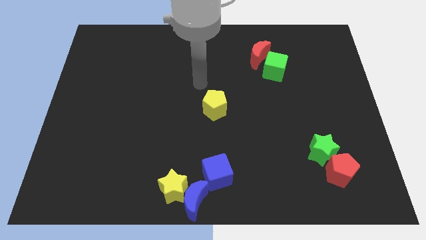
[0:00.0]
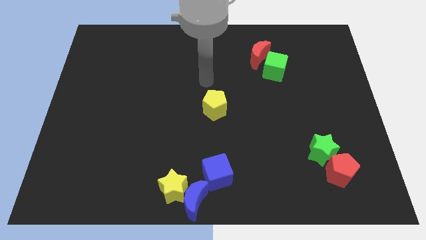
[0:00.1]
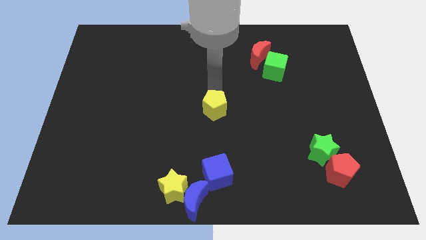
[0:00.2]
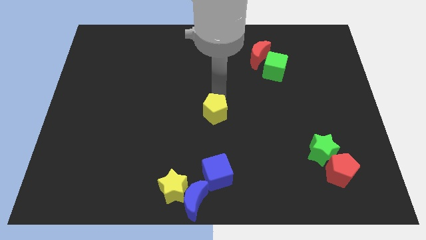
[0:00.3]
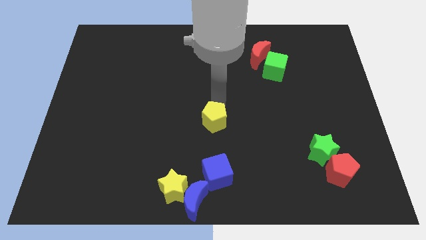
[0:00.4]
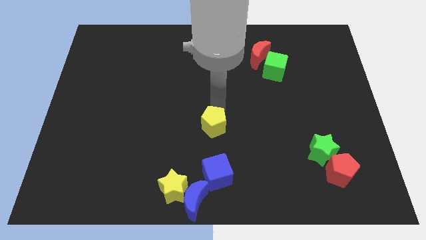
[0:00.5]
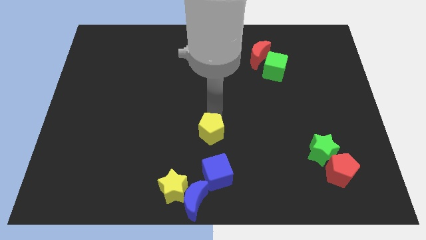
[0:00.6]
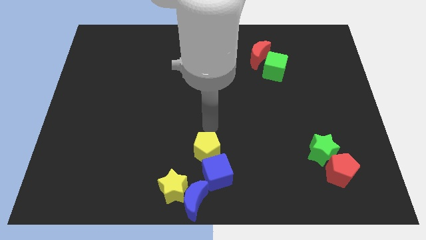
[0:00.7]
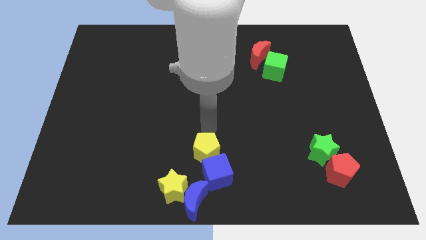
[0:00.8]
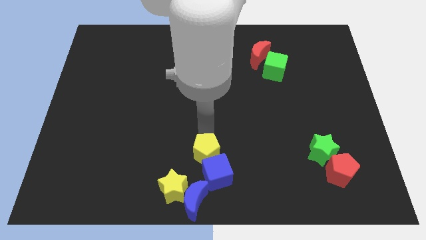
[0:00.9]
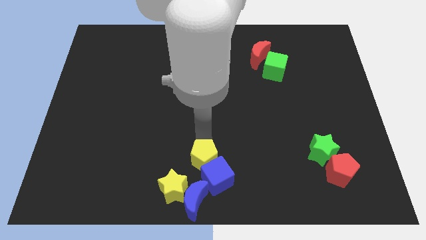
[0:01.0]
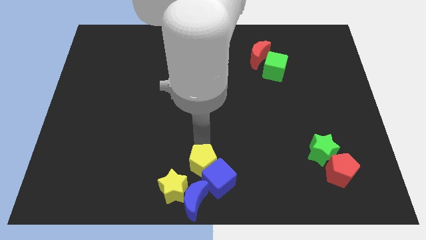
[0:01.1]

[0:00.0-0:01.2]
place yellow pentagon above the blue moon

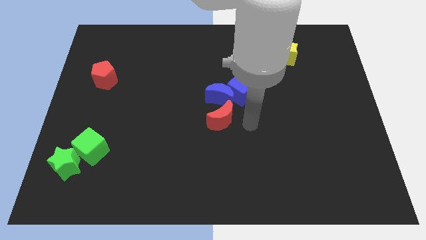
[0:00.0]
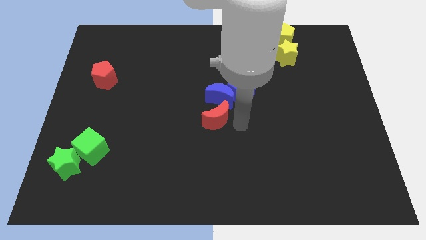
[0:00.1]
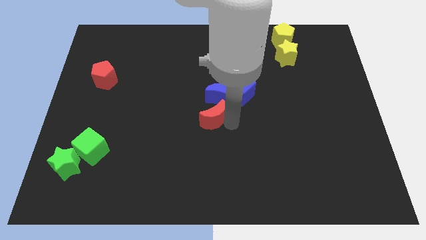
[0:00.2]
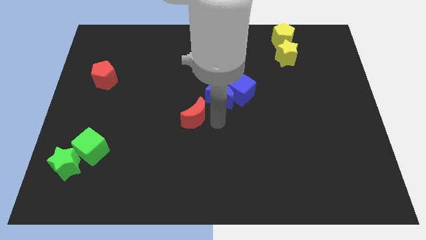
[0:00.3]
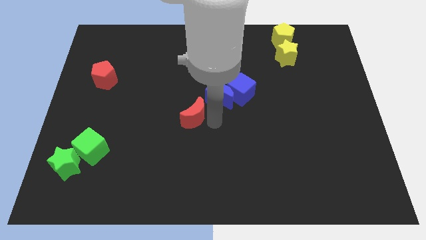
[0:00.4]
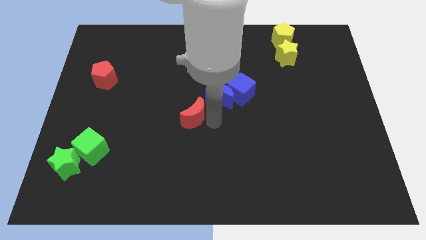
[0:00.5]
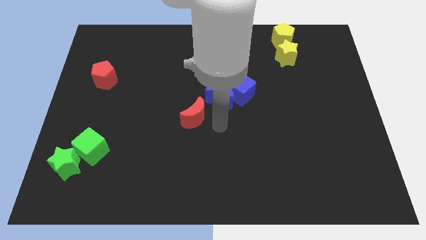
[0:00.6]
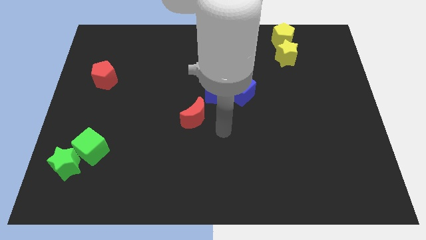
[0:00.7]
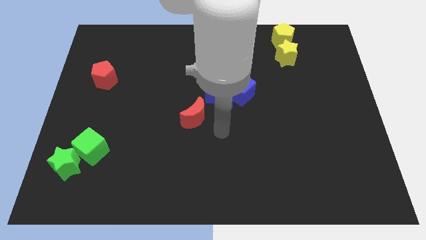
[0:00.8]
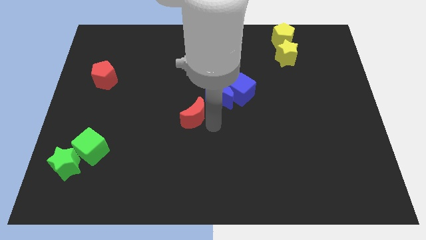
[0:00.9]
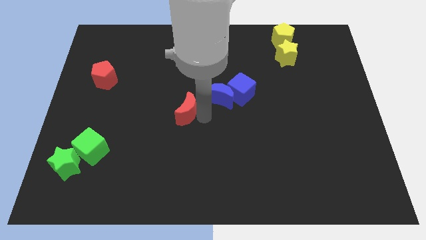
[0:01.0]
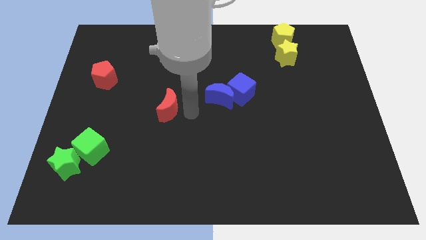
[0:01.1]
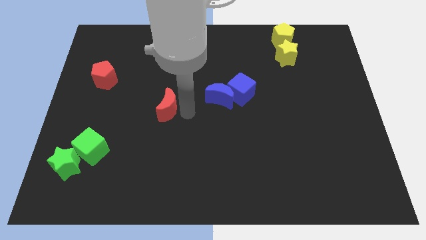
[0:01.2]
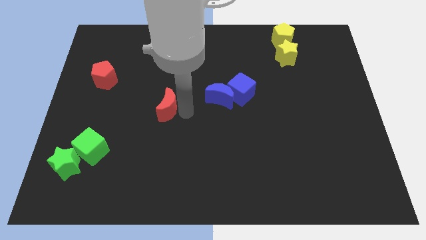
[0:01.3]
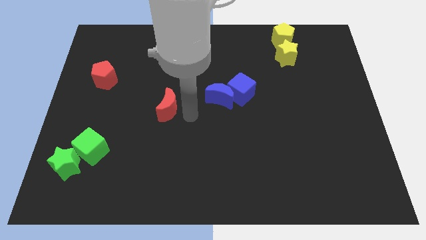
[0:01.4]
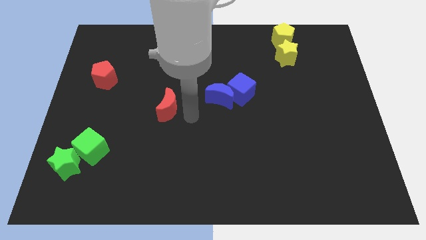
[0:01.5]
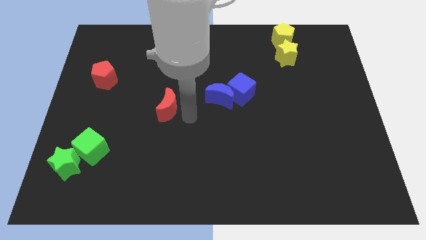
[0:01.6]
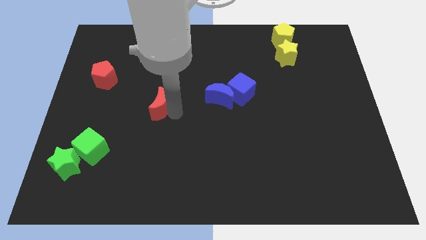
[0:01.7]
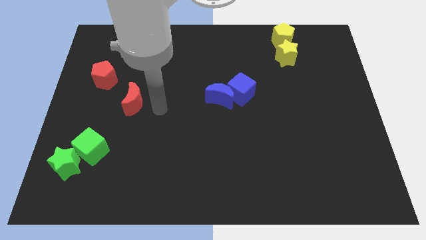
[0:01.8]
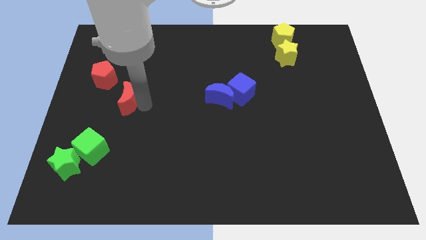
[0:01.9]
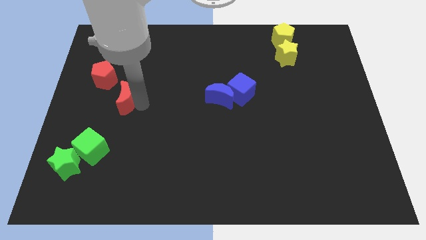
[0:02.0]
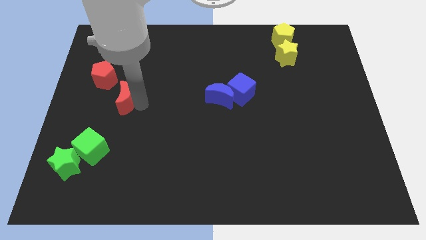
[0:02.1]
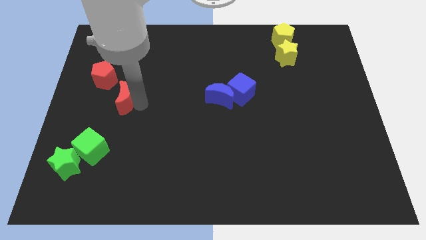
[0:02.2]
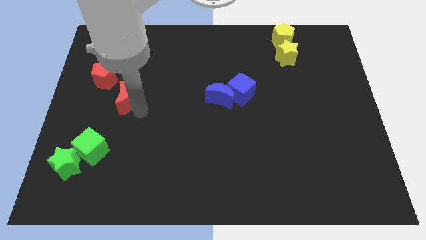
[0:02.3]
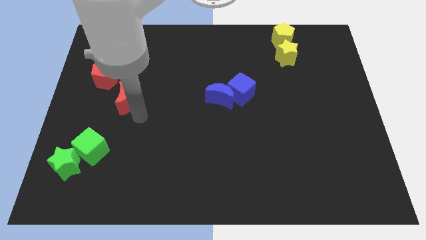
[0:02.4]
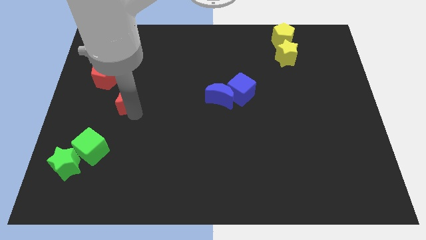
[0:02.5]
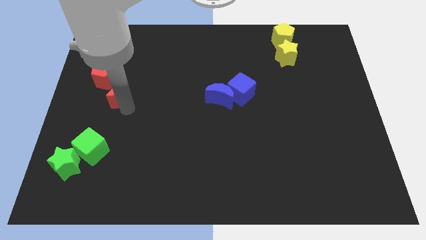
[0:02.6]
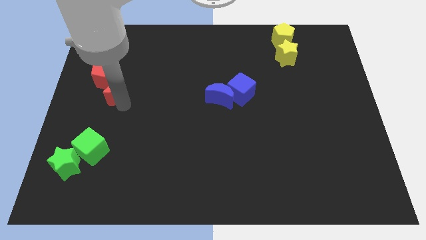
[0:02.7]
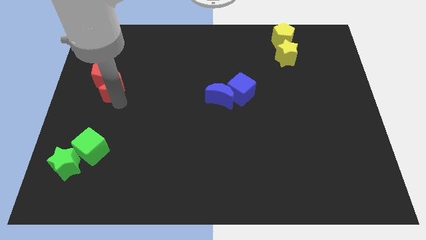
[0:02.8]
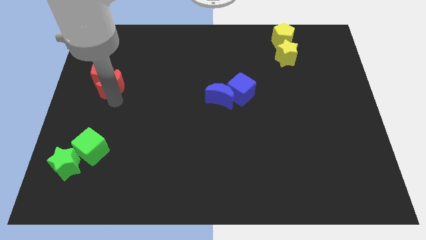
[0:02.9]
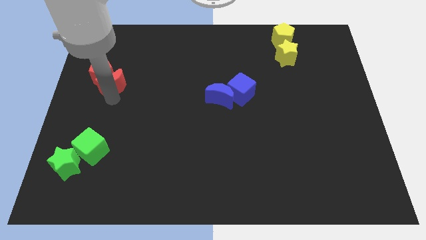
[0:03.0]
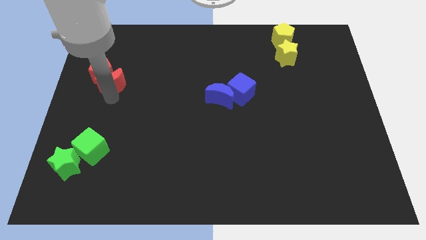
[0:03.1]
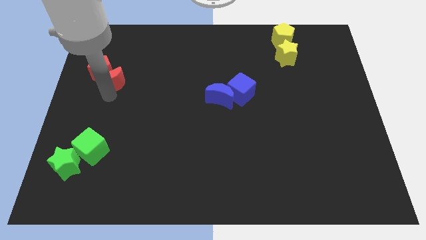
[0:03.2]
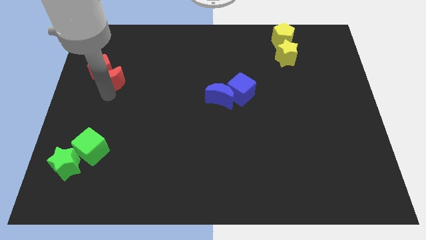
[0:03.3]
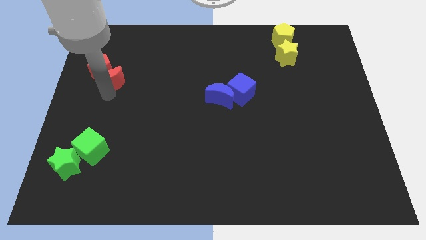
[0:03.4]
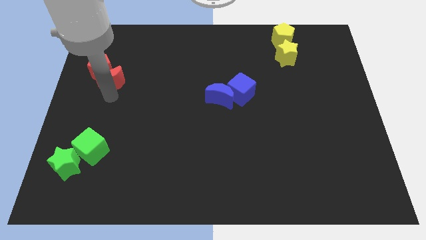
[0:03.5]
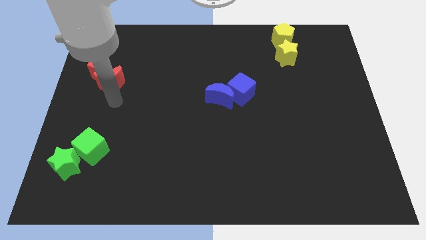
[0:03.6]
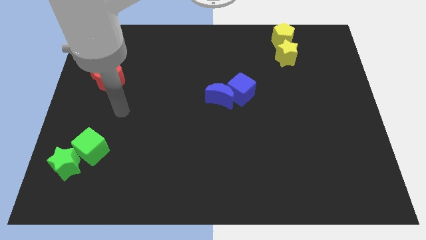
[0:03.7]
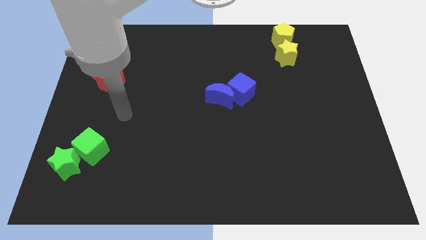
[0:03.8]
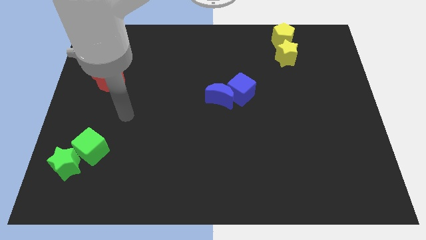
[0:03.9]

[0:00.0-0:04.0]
push the red moon into the red pentagon

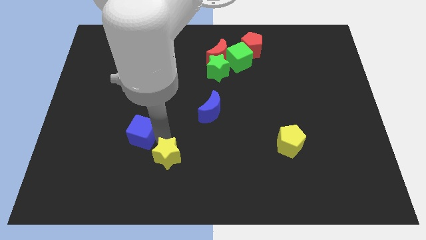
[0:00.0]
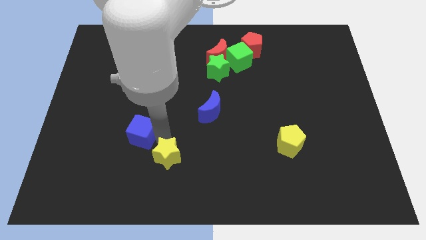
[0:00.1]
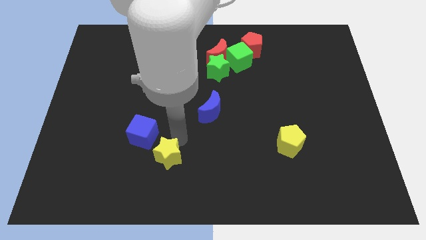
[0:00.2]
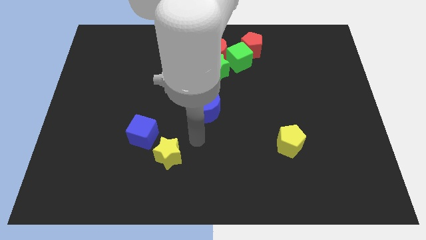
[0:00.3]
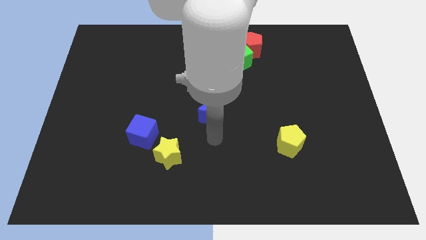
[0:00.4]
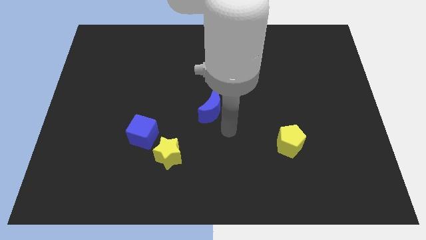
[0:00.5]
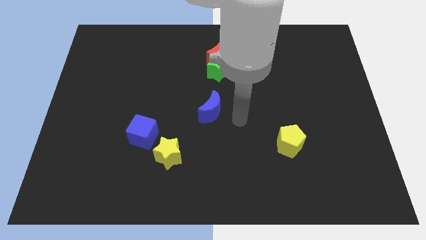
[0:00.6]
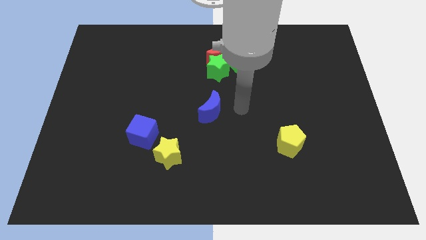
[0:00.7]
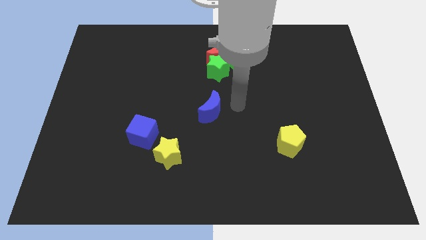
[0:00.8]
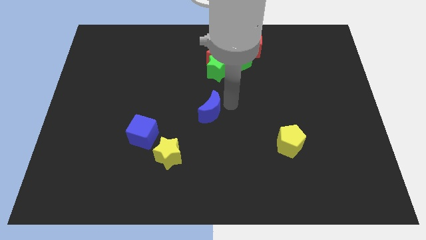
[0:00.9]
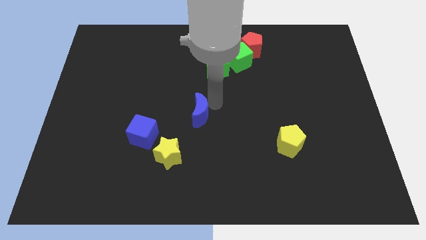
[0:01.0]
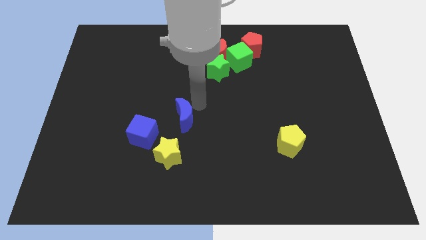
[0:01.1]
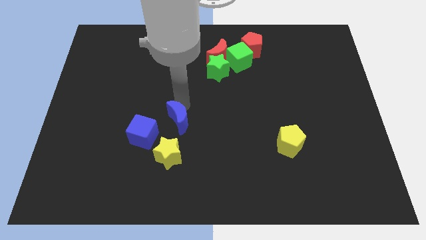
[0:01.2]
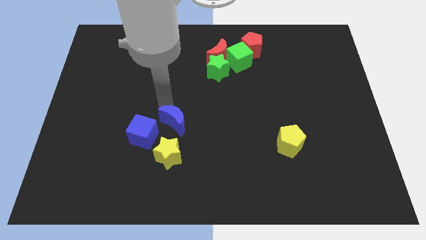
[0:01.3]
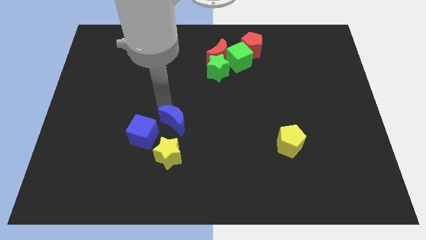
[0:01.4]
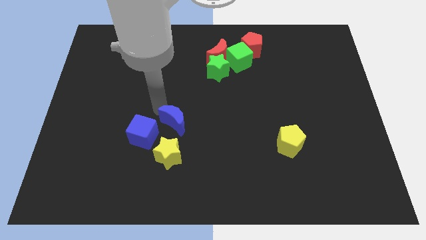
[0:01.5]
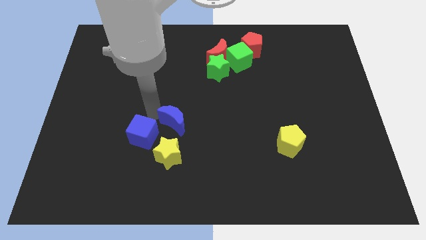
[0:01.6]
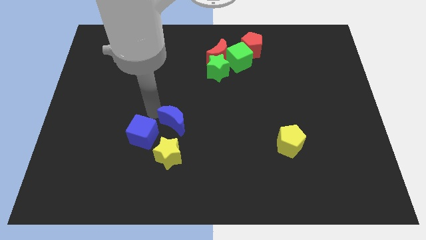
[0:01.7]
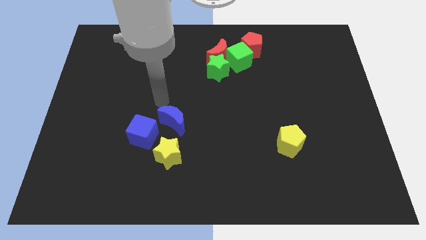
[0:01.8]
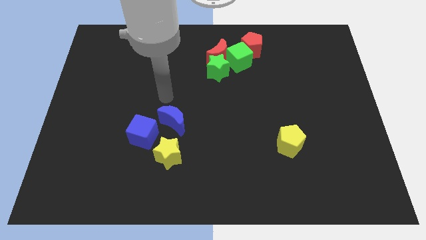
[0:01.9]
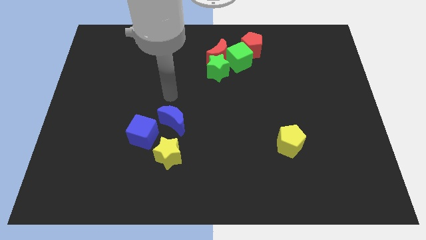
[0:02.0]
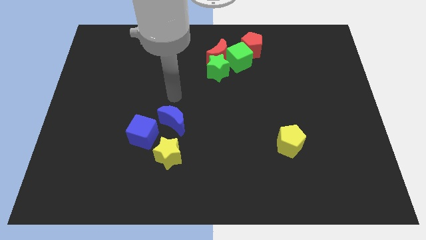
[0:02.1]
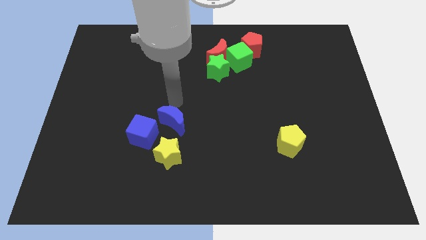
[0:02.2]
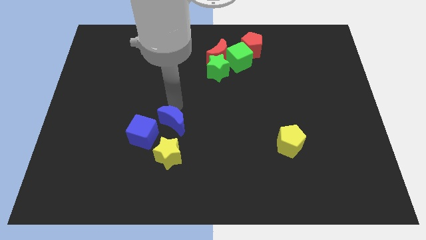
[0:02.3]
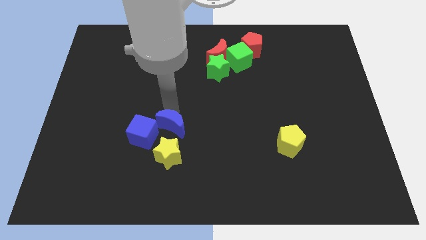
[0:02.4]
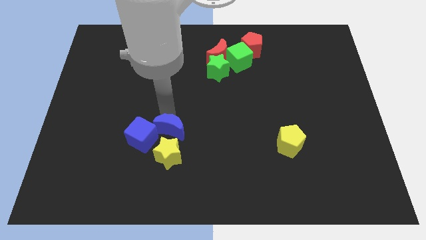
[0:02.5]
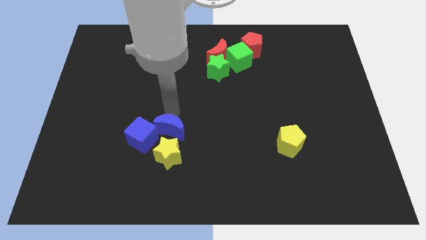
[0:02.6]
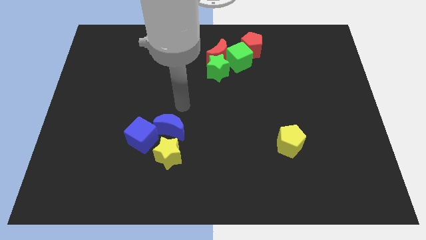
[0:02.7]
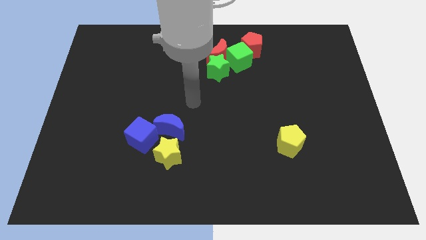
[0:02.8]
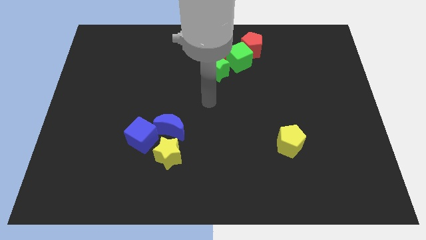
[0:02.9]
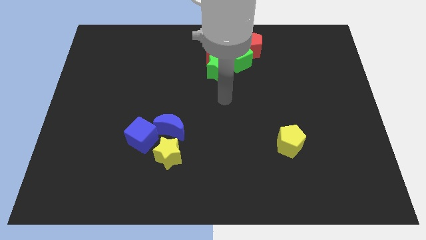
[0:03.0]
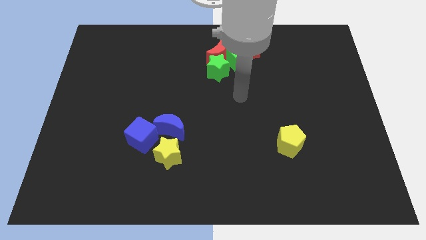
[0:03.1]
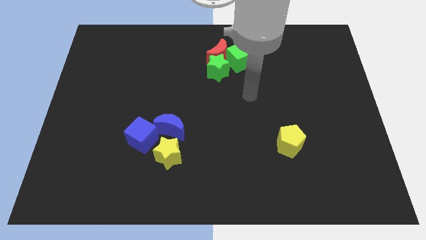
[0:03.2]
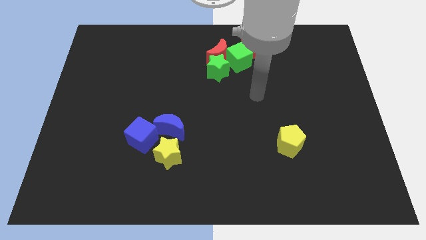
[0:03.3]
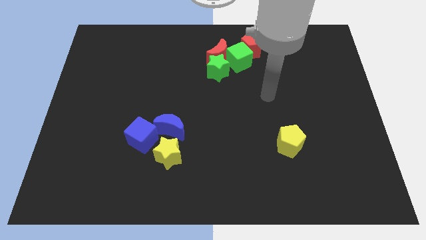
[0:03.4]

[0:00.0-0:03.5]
move blue moon diagonally bottom left to the green star

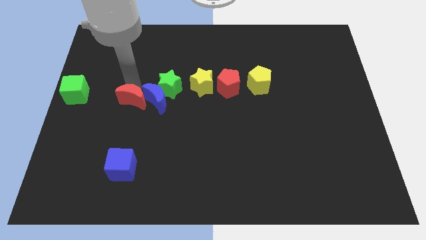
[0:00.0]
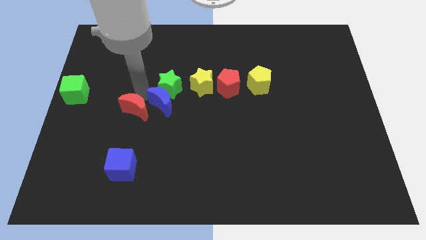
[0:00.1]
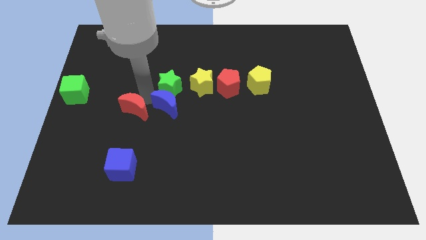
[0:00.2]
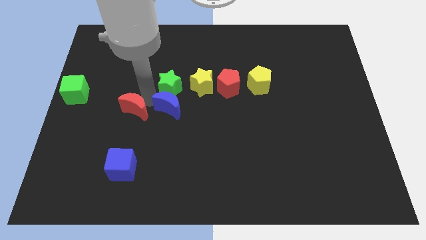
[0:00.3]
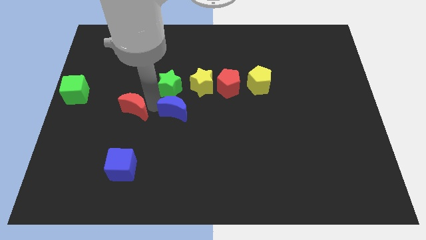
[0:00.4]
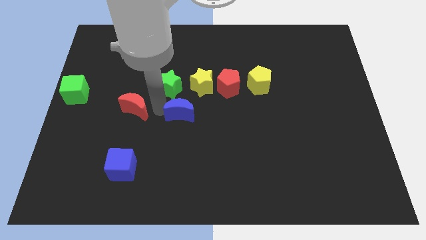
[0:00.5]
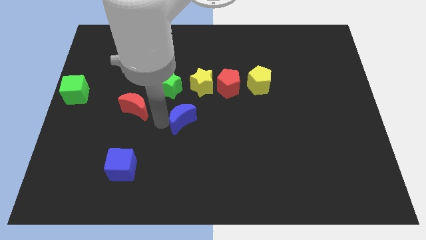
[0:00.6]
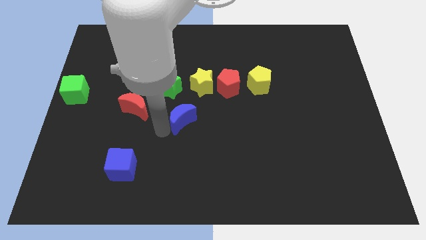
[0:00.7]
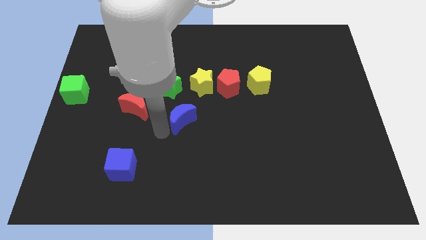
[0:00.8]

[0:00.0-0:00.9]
push the blue crescent to the bottom of the green star
